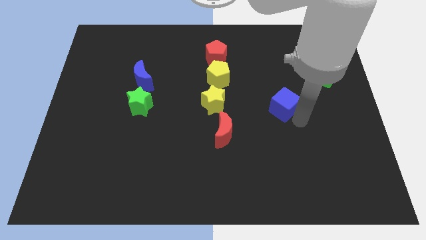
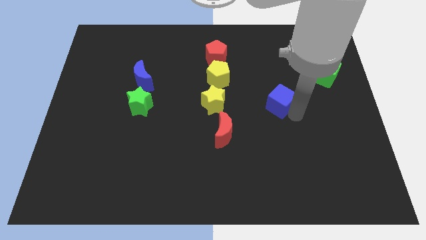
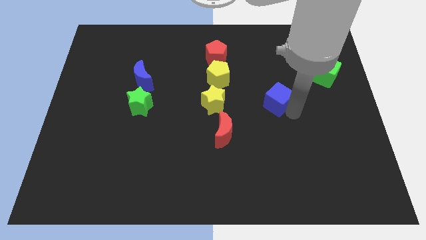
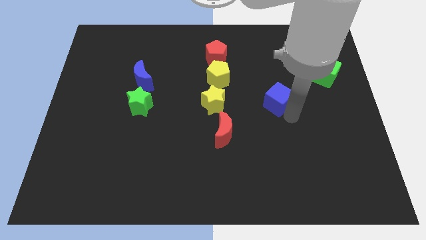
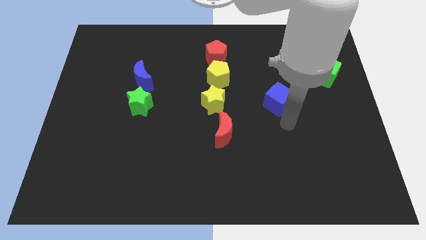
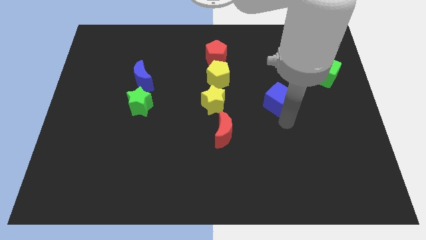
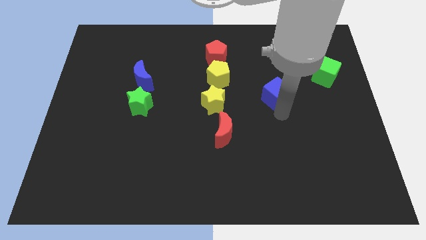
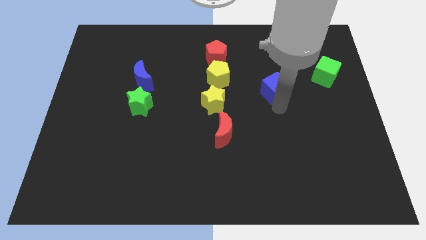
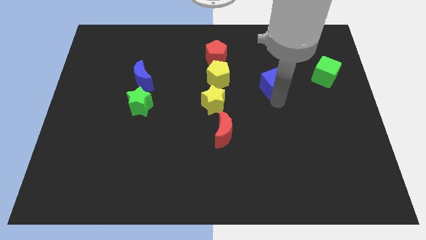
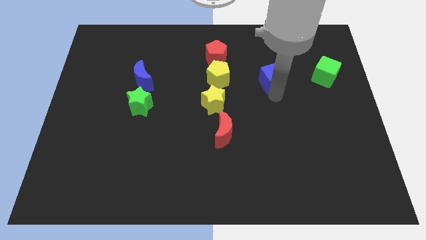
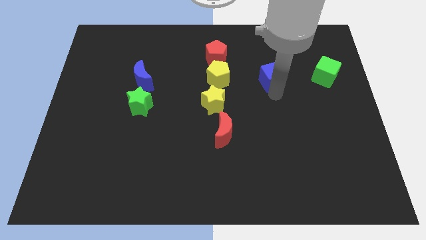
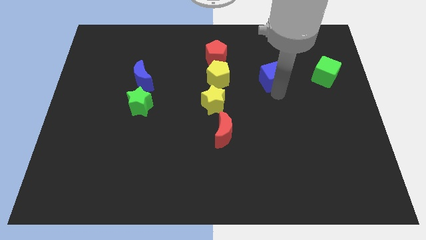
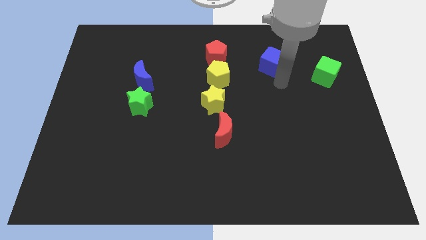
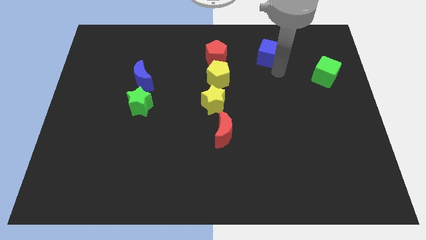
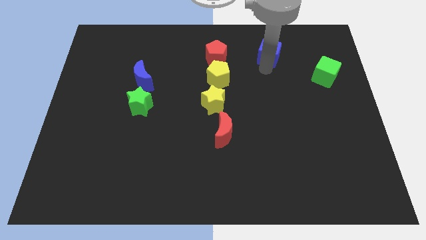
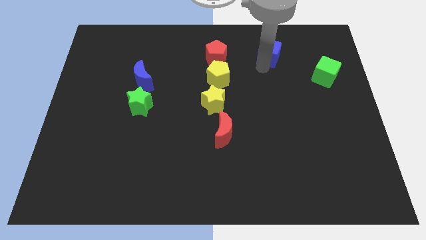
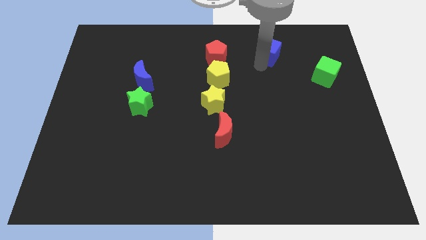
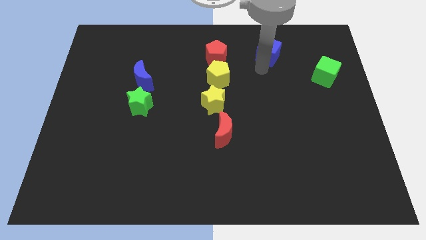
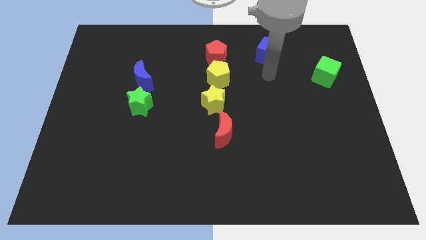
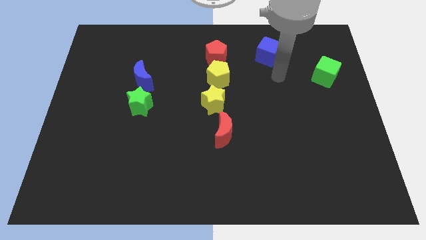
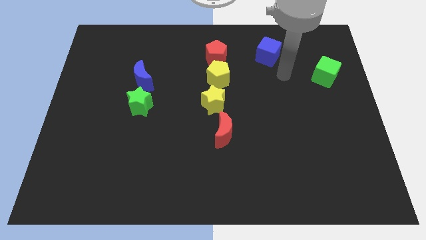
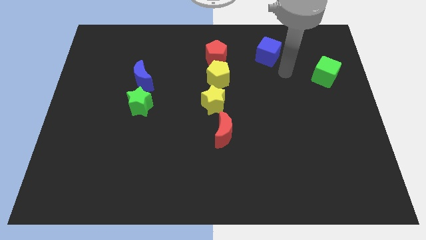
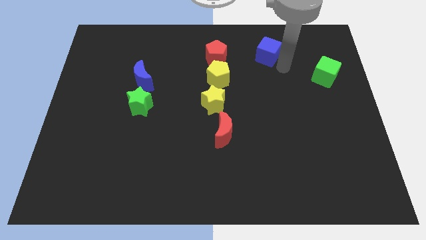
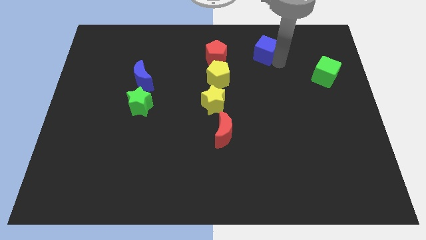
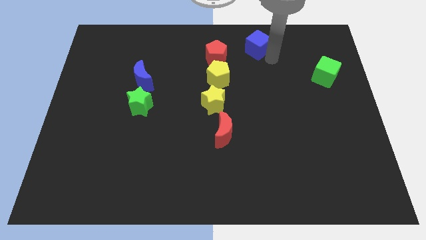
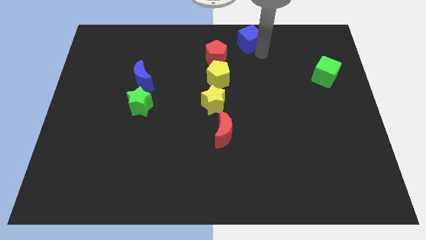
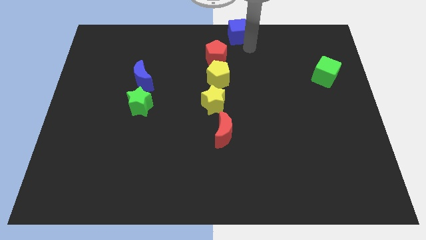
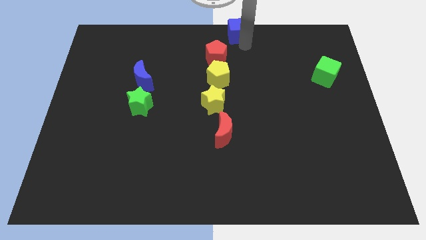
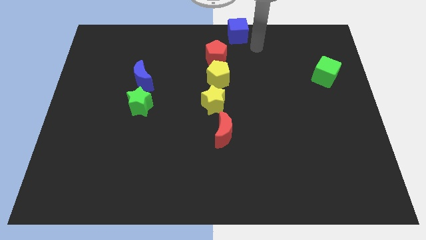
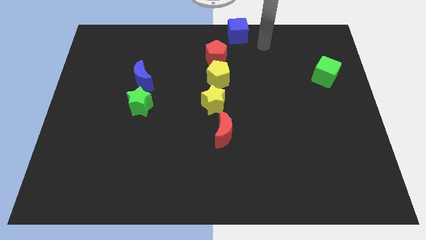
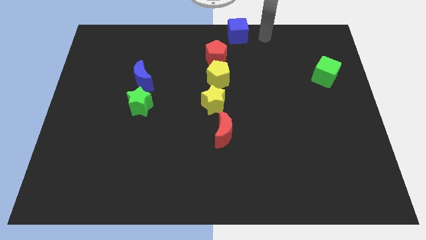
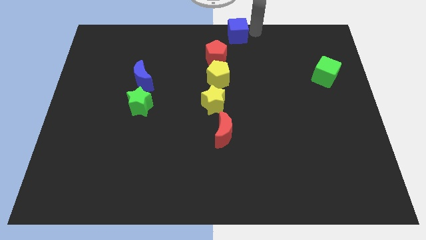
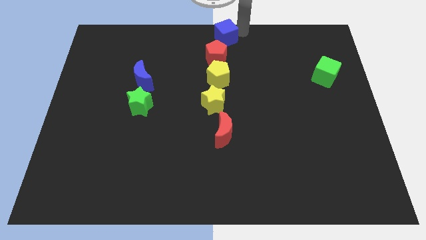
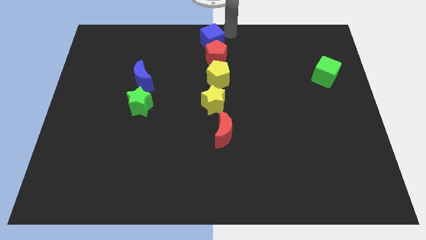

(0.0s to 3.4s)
place the blue cube at the top center of the board

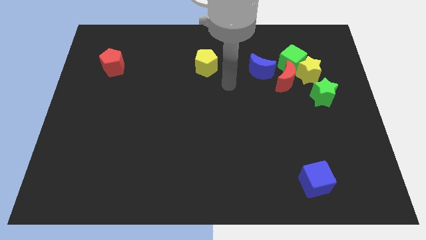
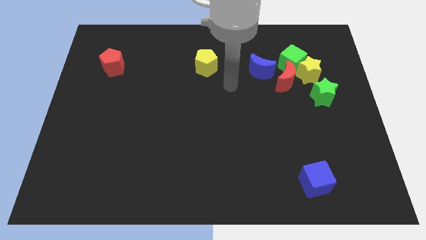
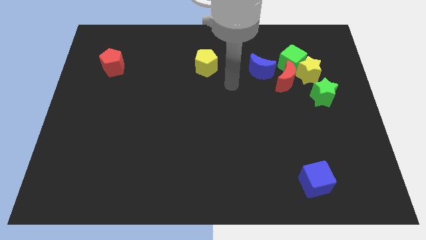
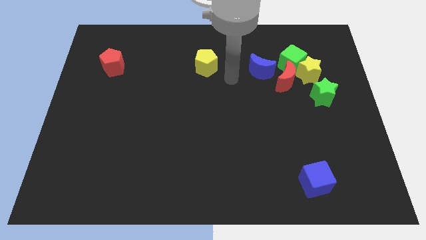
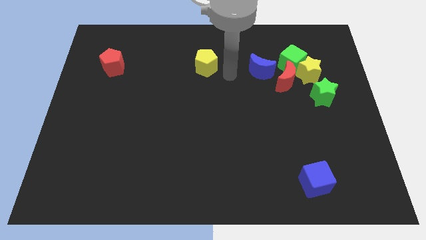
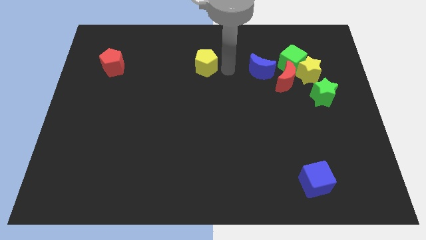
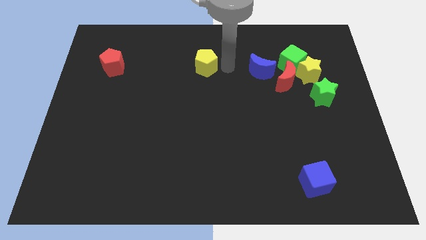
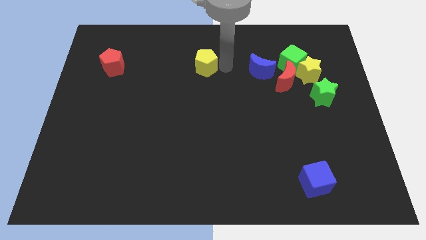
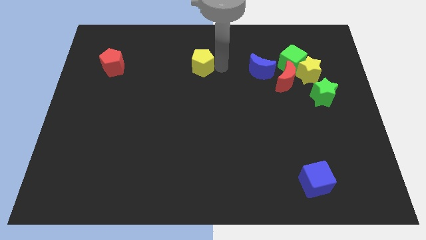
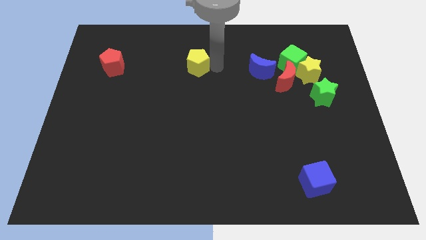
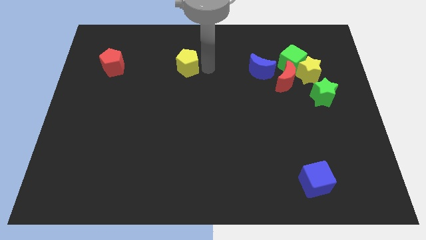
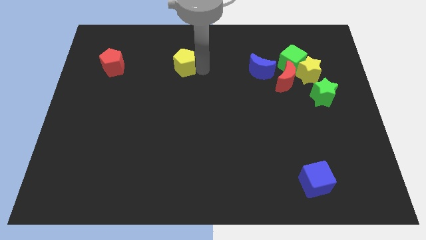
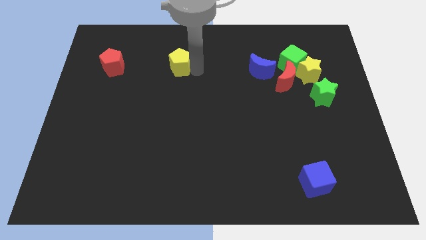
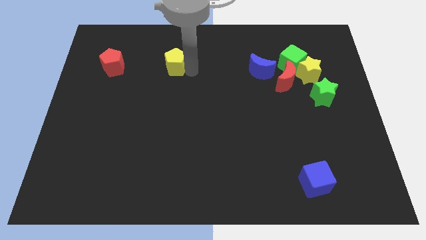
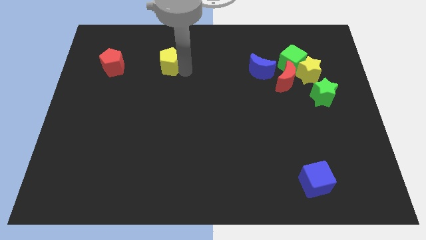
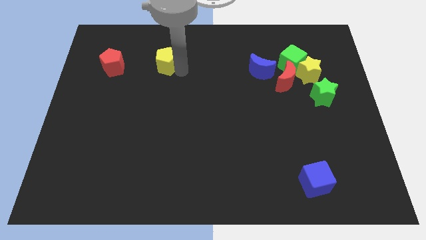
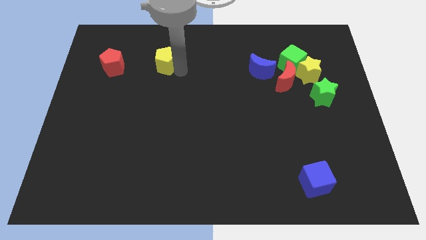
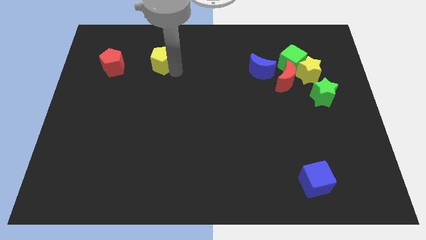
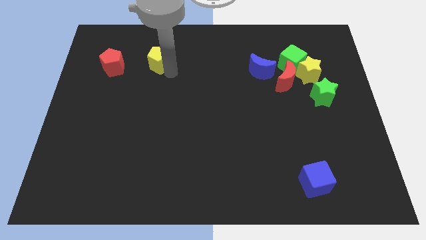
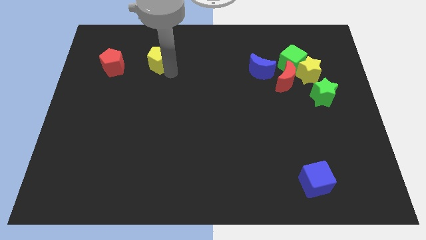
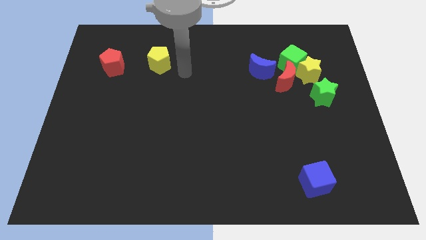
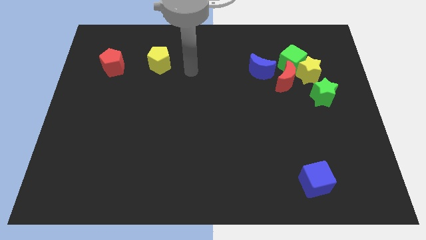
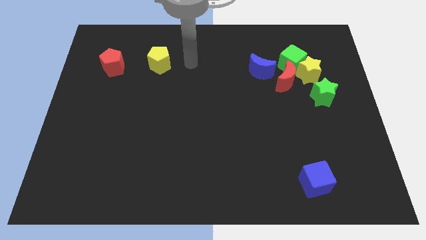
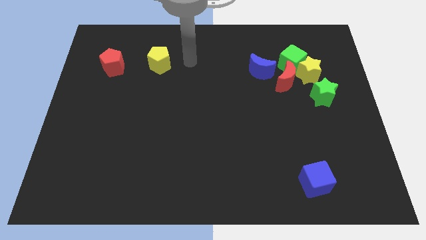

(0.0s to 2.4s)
move the yellow pentagon towards red pentagon

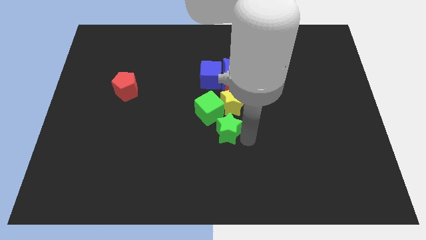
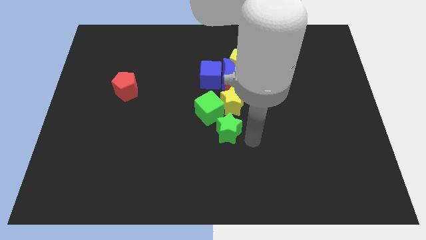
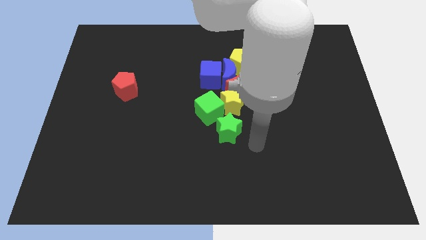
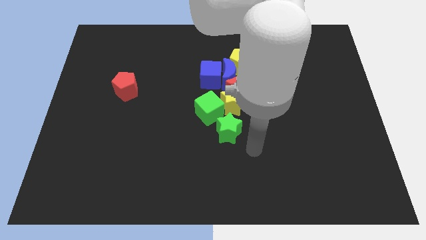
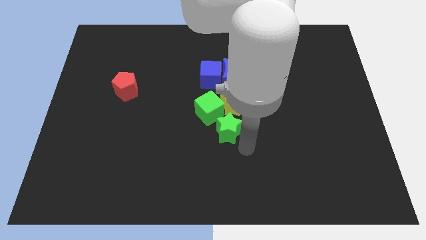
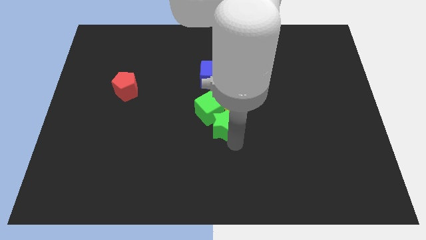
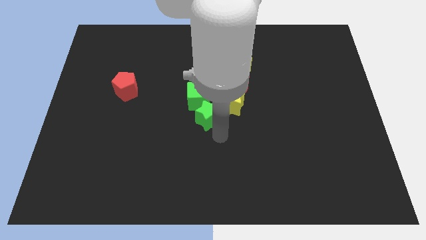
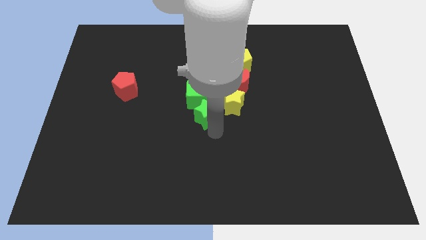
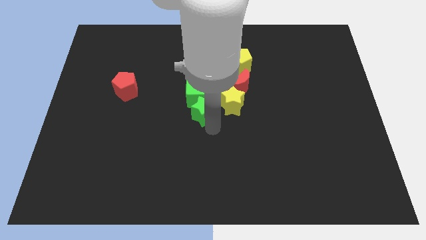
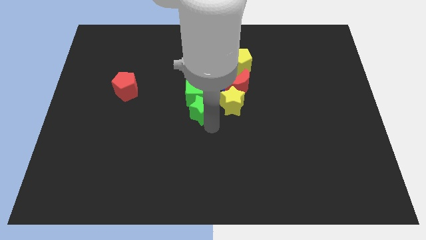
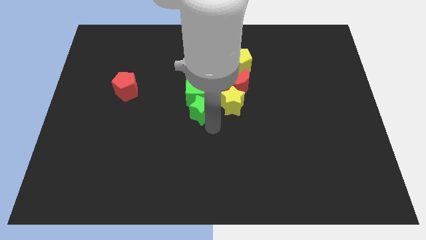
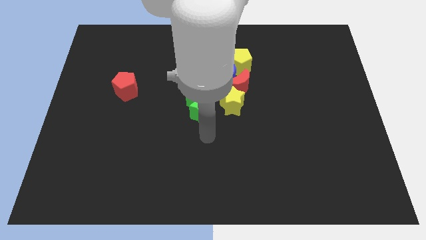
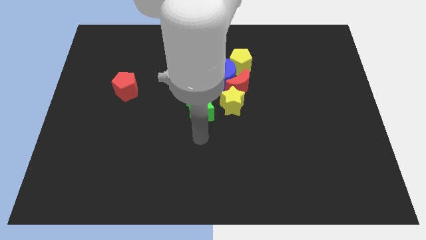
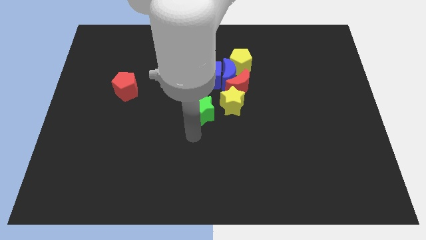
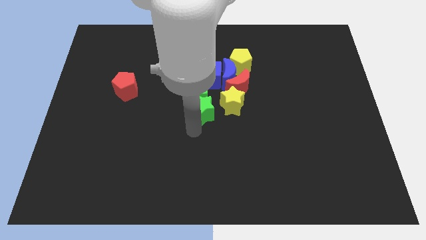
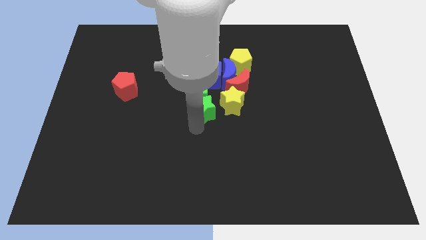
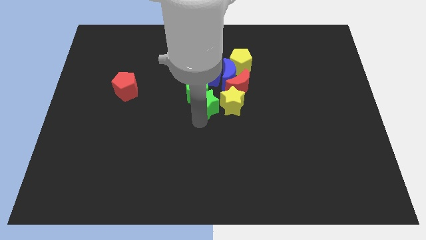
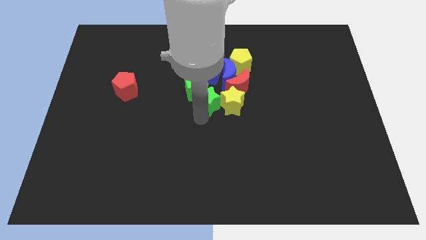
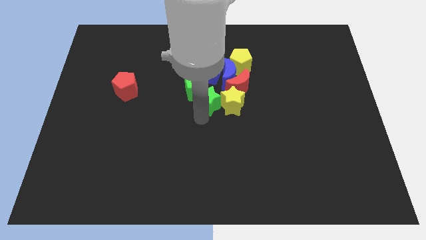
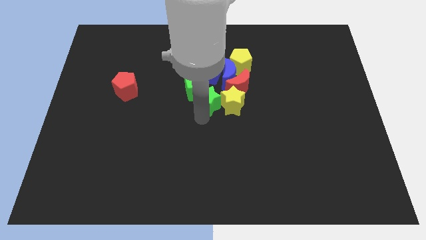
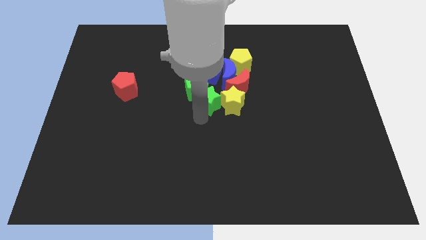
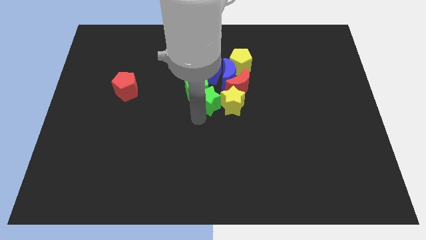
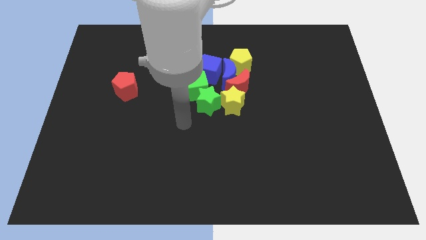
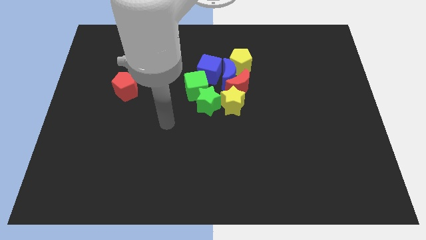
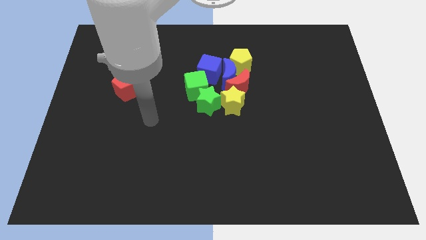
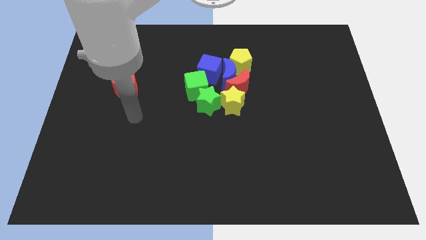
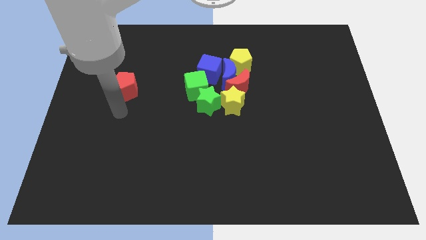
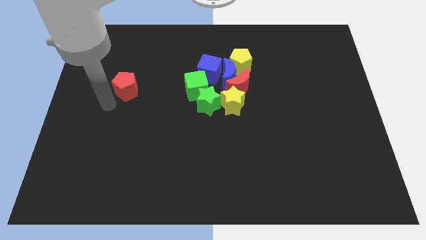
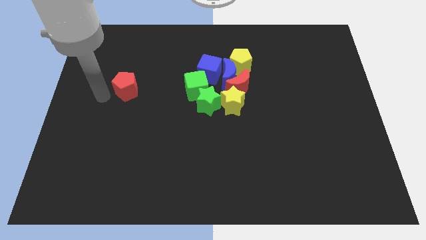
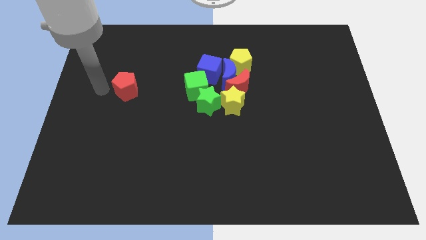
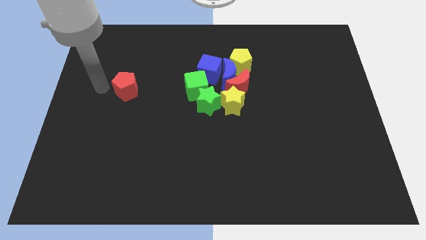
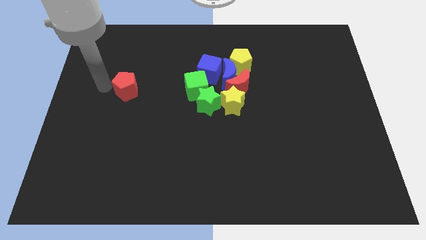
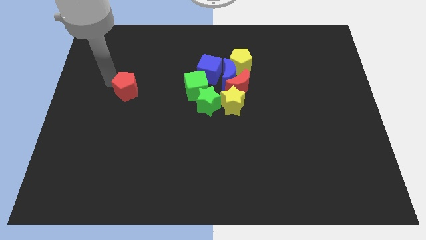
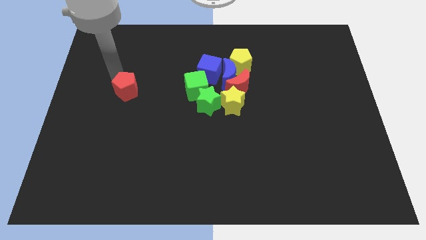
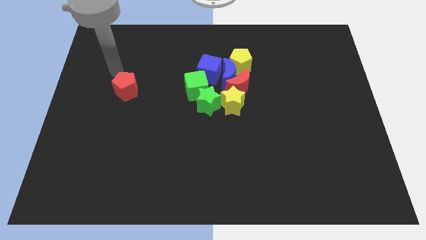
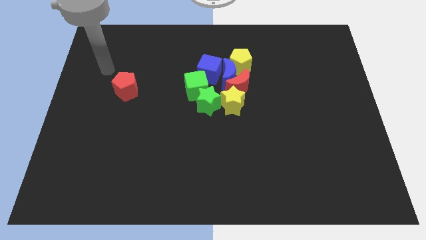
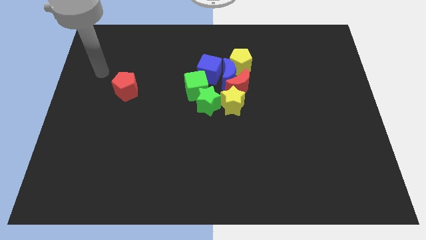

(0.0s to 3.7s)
push the green star into the green cube
